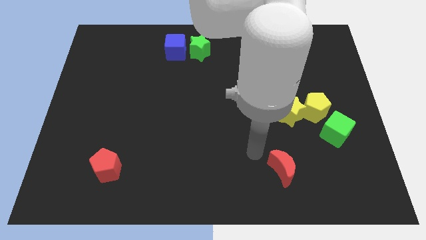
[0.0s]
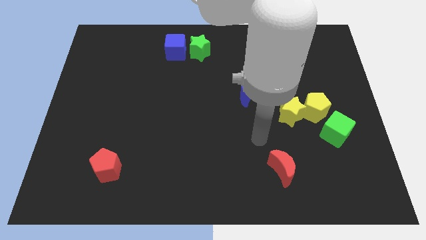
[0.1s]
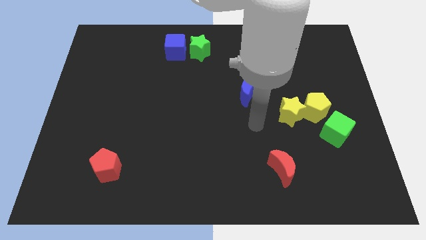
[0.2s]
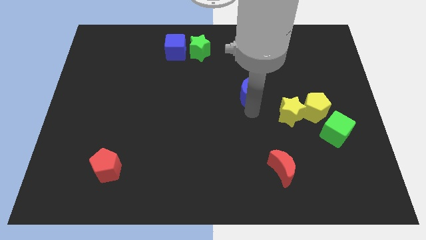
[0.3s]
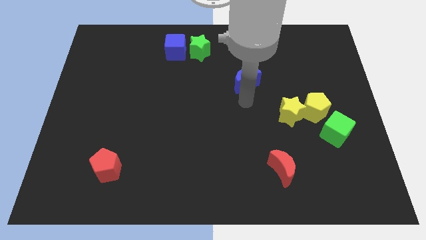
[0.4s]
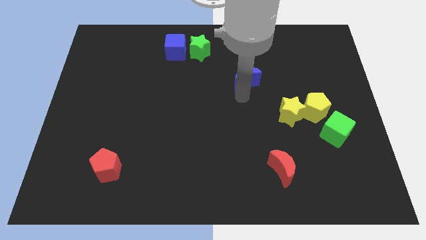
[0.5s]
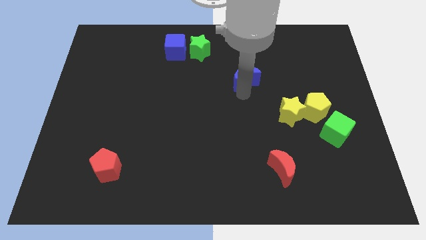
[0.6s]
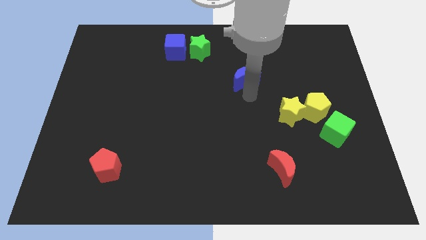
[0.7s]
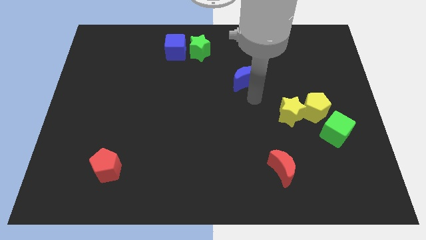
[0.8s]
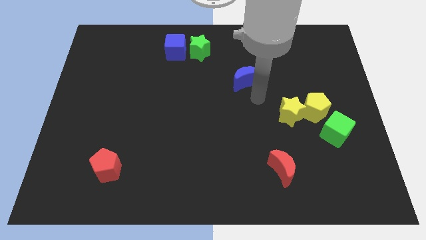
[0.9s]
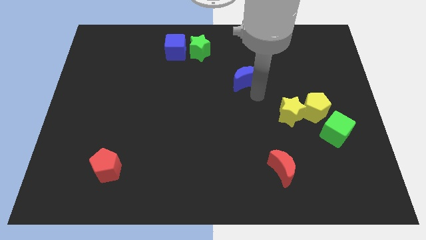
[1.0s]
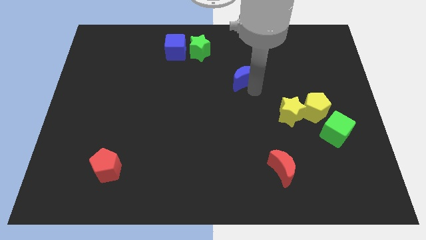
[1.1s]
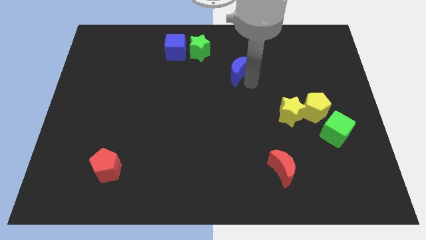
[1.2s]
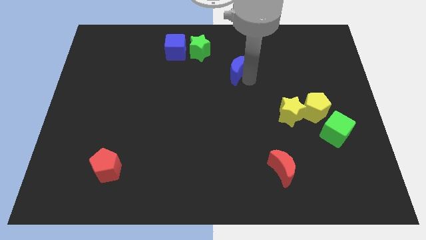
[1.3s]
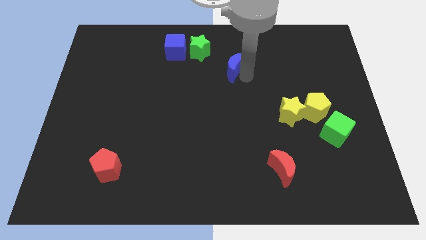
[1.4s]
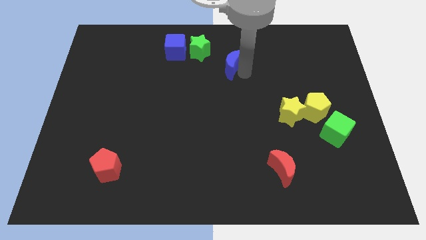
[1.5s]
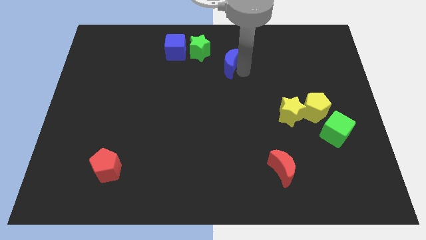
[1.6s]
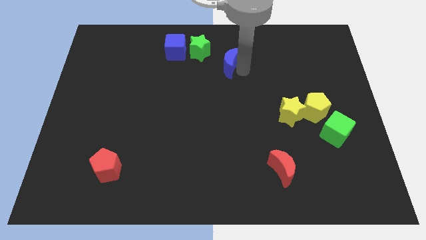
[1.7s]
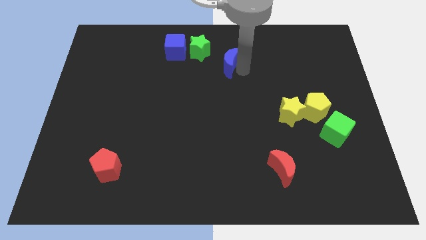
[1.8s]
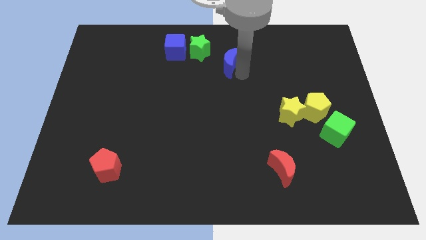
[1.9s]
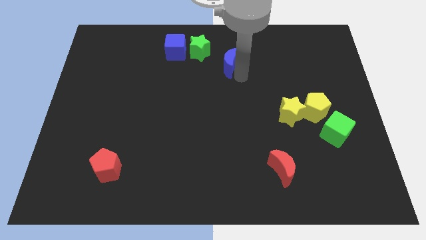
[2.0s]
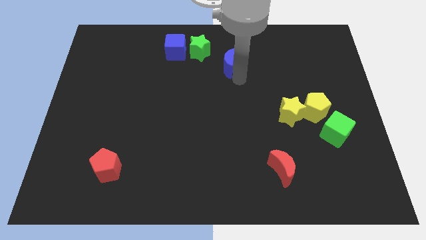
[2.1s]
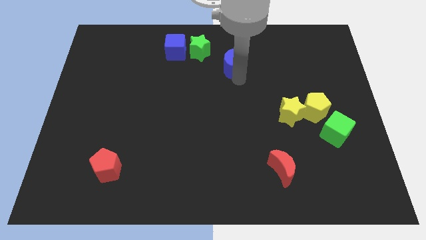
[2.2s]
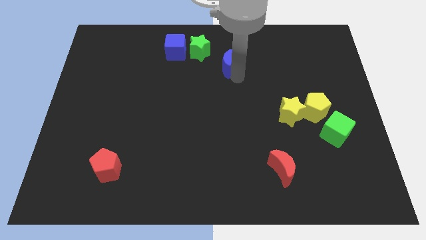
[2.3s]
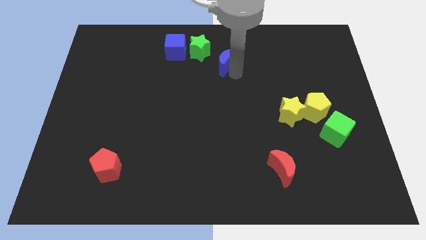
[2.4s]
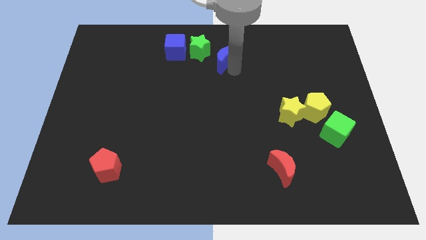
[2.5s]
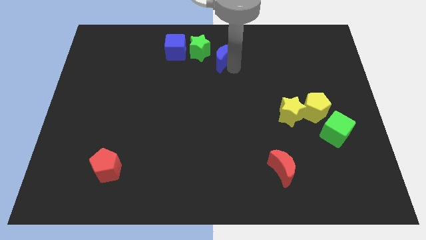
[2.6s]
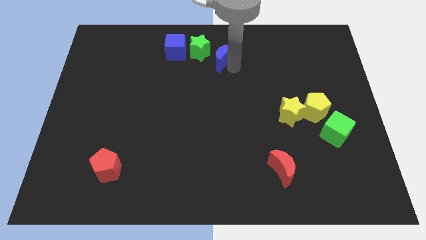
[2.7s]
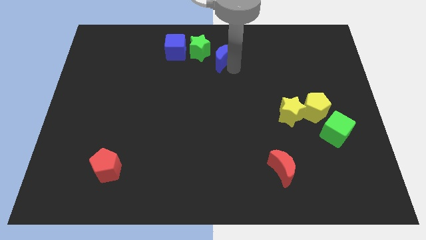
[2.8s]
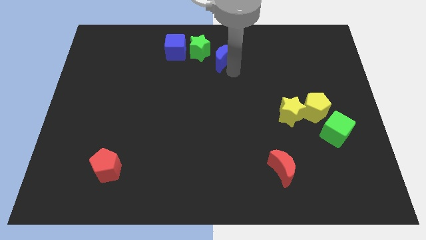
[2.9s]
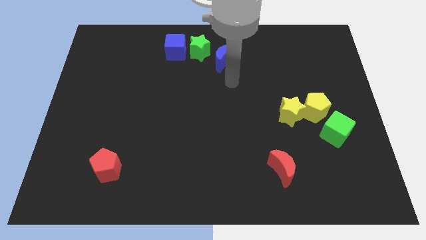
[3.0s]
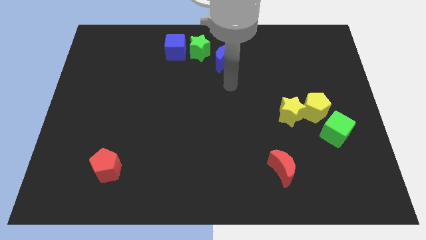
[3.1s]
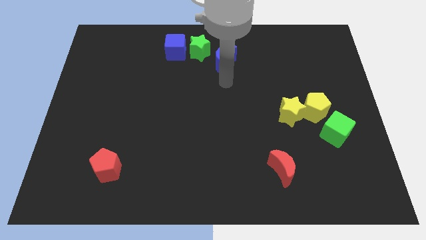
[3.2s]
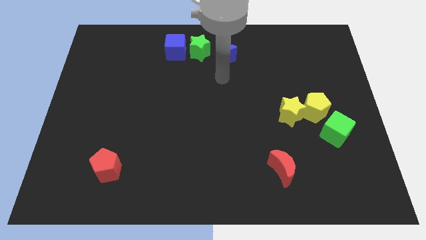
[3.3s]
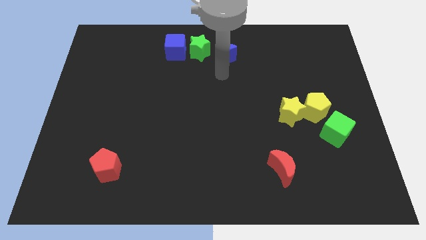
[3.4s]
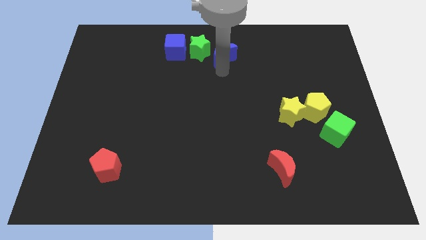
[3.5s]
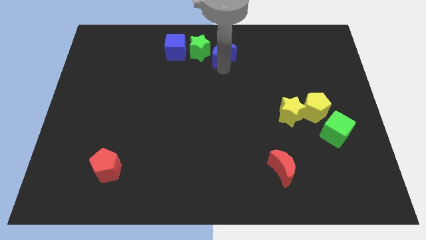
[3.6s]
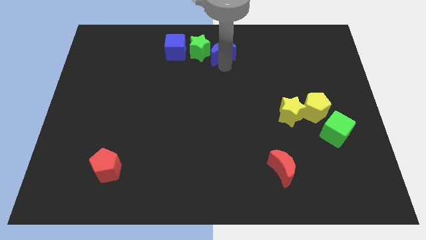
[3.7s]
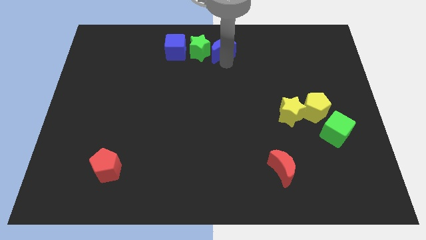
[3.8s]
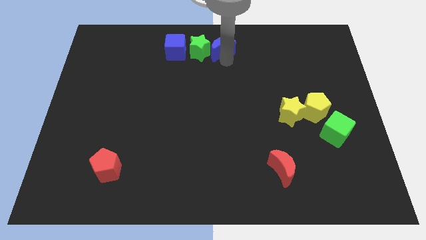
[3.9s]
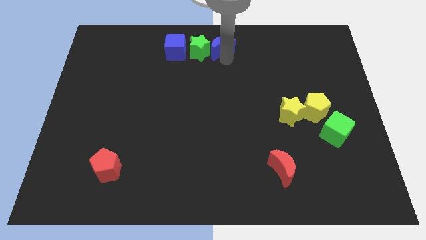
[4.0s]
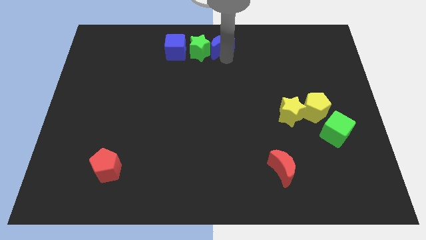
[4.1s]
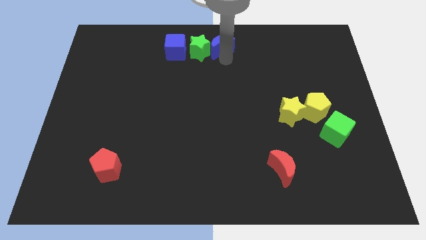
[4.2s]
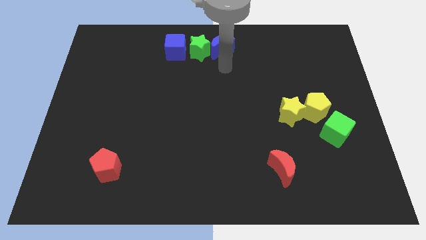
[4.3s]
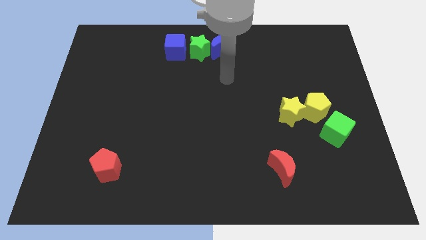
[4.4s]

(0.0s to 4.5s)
push blue half moon to top center of the board

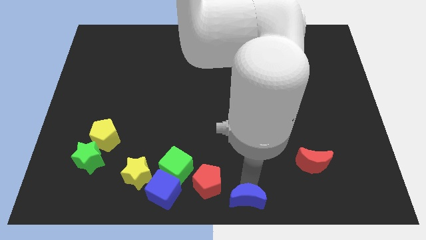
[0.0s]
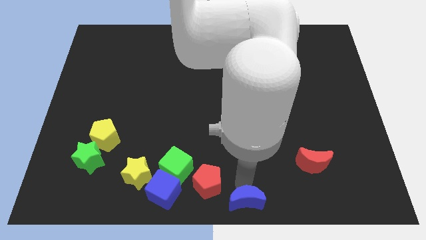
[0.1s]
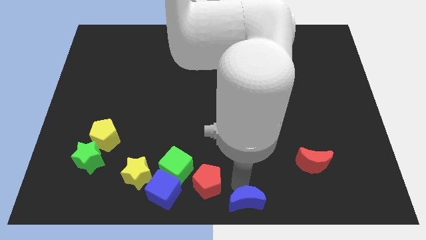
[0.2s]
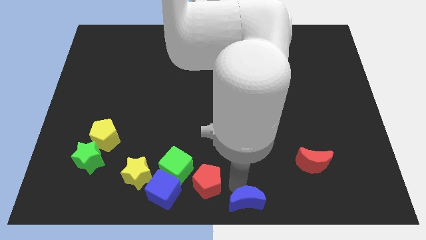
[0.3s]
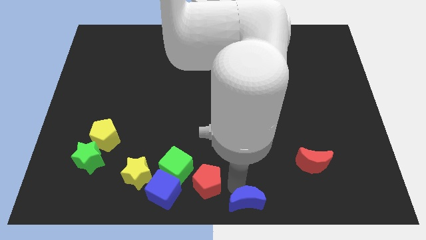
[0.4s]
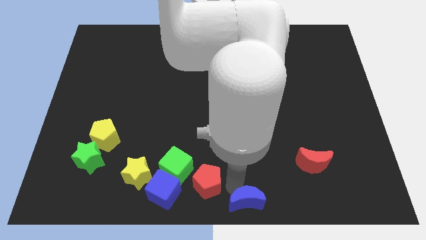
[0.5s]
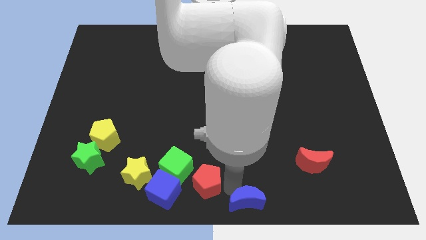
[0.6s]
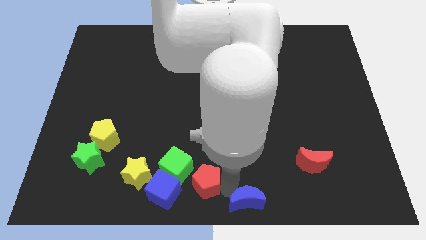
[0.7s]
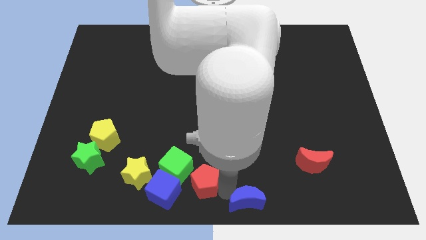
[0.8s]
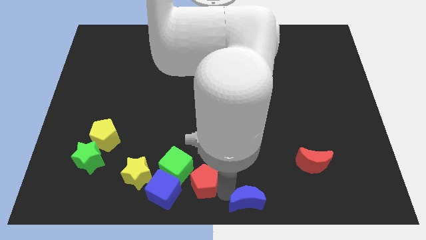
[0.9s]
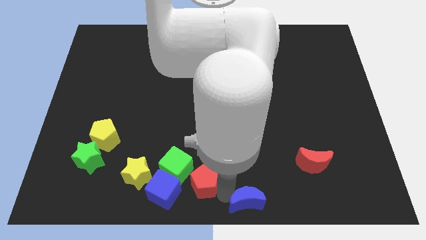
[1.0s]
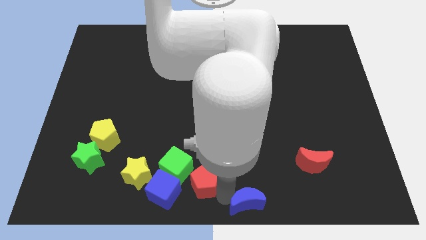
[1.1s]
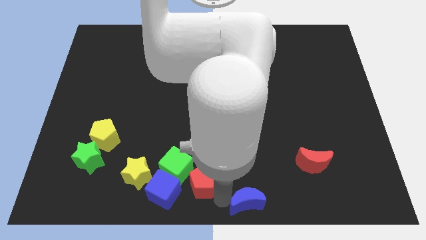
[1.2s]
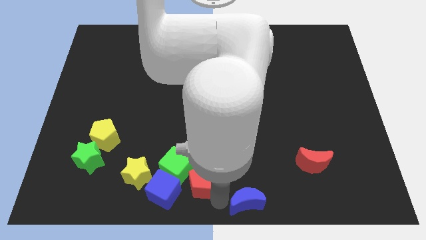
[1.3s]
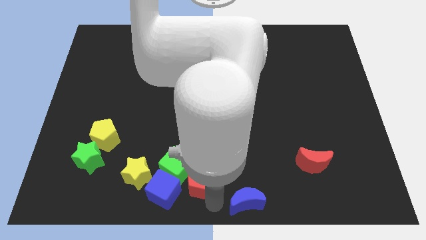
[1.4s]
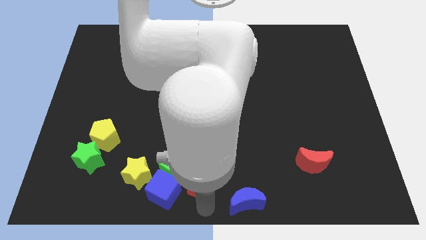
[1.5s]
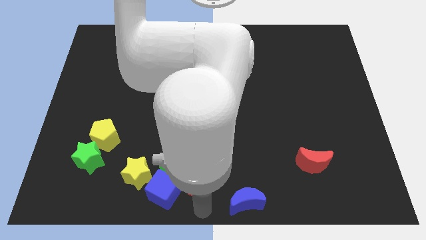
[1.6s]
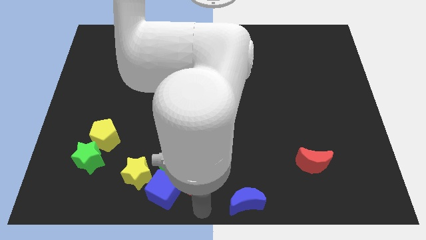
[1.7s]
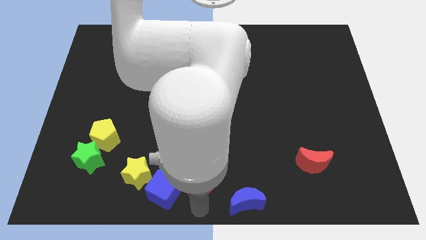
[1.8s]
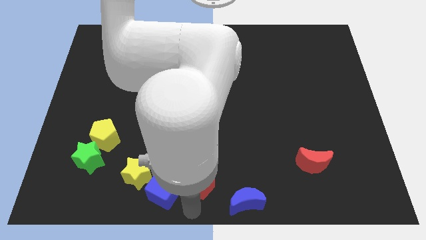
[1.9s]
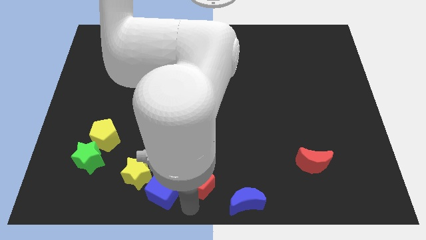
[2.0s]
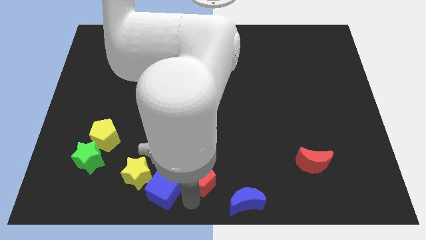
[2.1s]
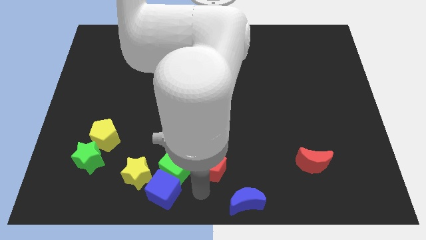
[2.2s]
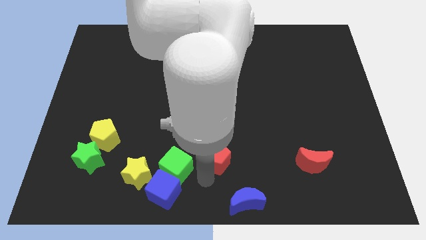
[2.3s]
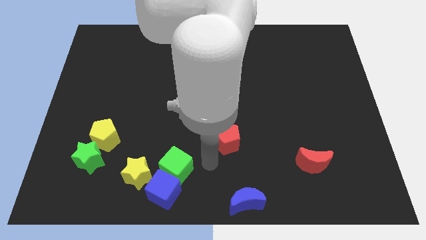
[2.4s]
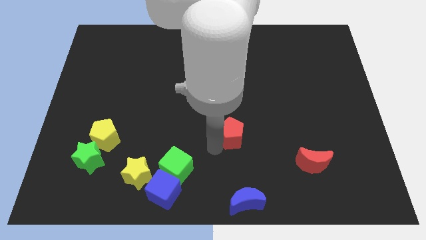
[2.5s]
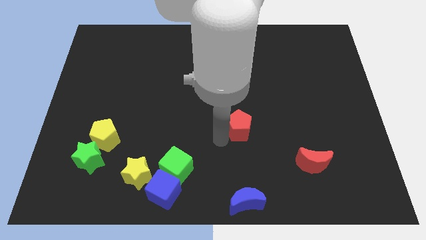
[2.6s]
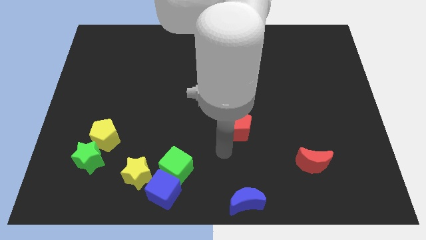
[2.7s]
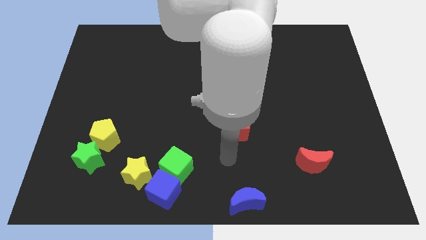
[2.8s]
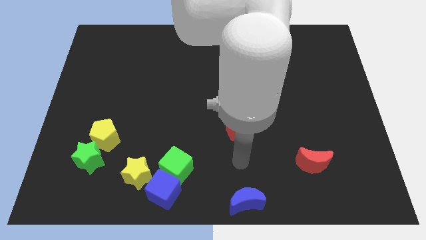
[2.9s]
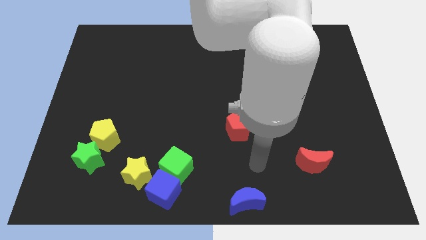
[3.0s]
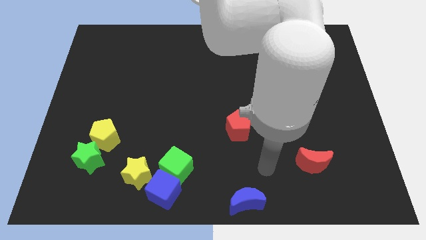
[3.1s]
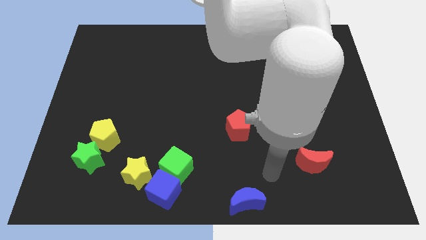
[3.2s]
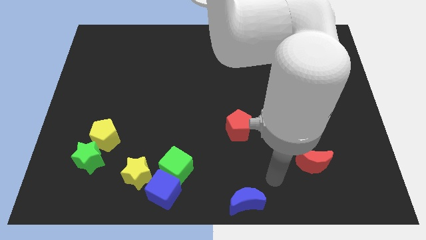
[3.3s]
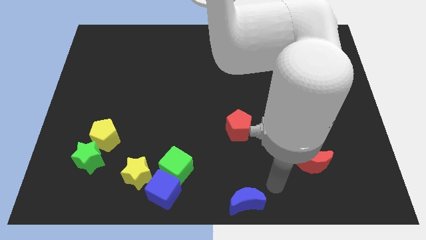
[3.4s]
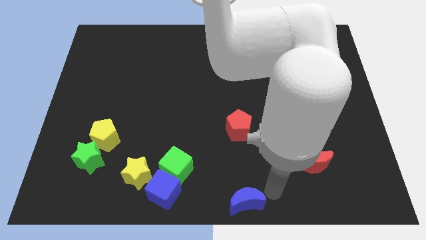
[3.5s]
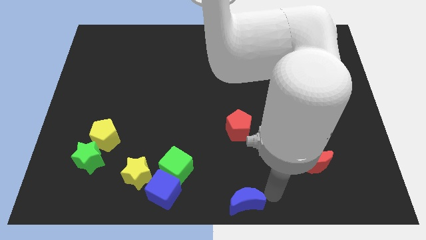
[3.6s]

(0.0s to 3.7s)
push the red pentagon towards the center of board

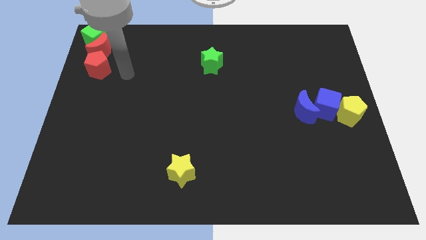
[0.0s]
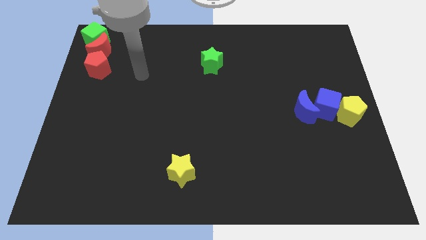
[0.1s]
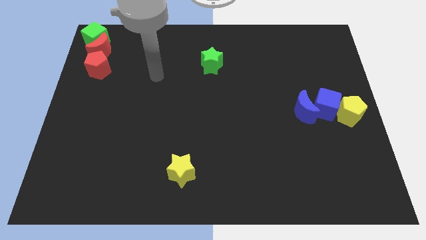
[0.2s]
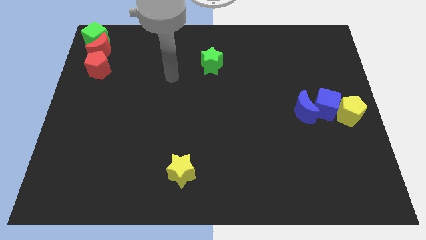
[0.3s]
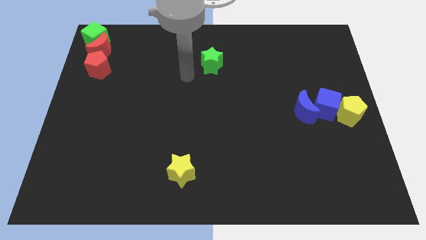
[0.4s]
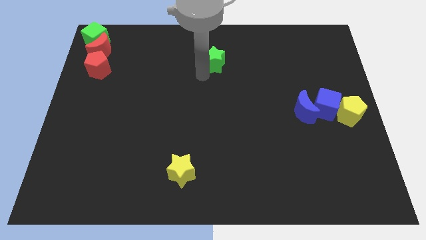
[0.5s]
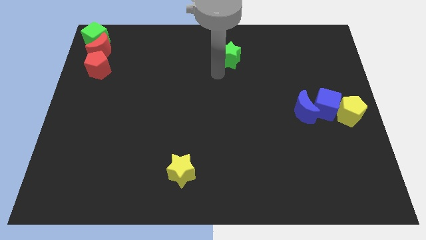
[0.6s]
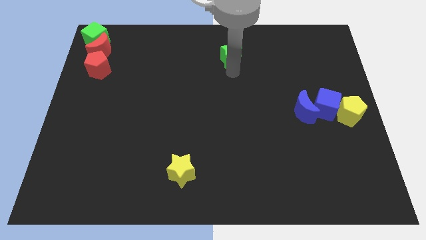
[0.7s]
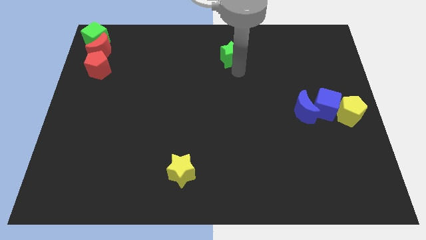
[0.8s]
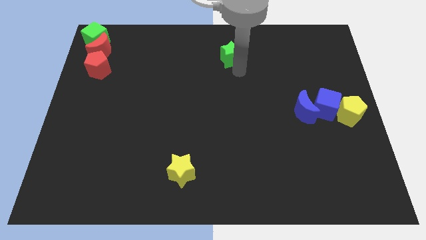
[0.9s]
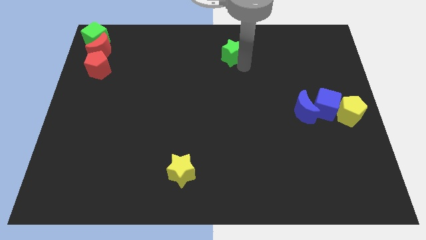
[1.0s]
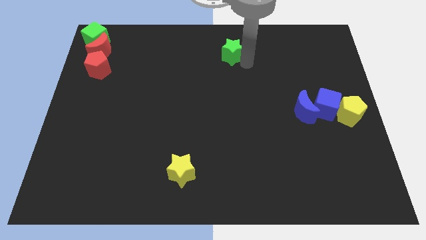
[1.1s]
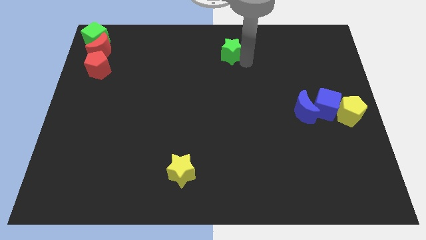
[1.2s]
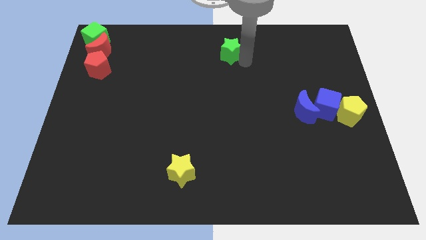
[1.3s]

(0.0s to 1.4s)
move the green star up slightly
